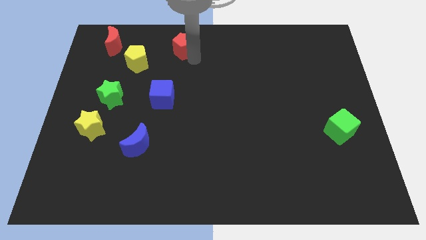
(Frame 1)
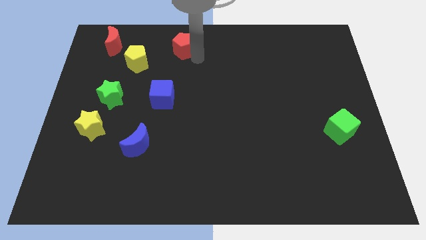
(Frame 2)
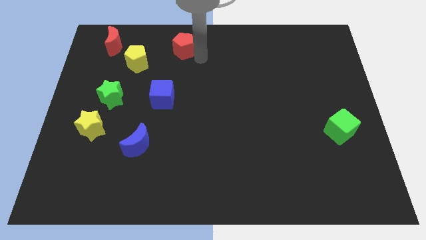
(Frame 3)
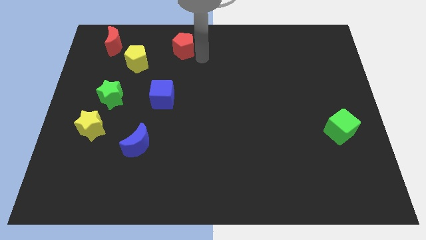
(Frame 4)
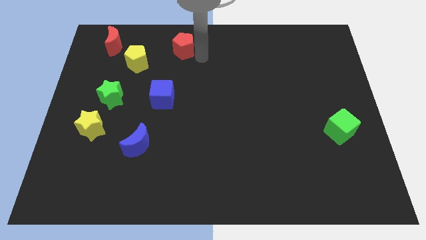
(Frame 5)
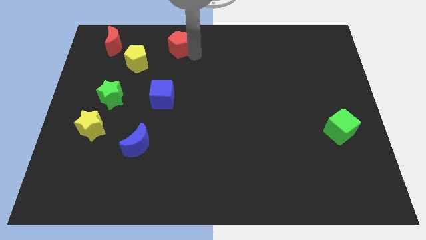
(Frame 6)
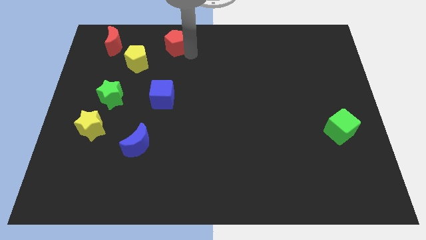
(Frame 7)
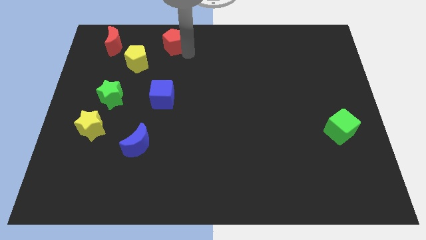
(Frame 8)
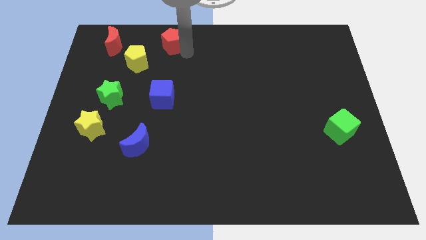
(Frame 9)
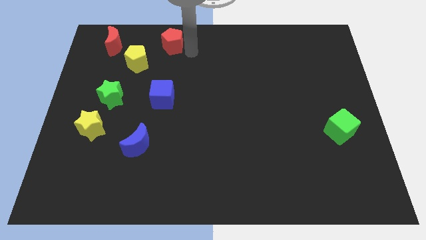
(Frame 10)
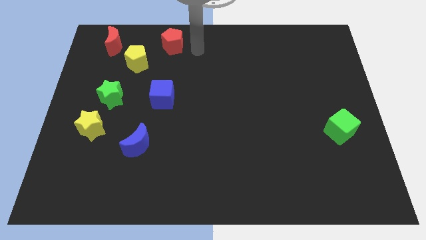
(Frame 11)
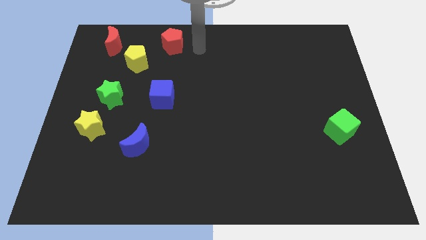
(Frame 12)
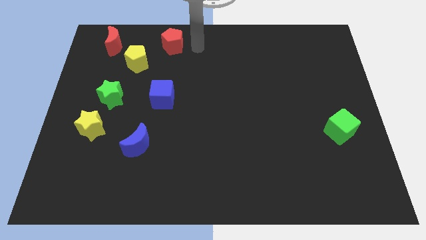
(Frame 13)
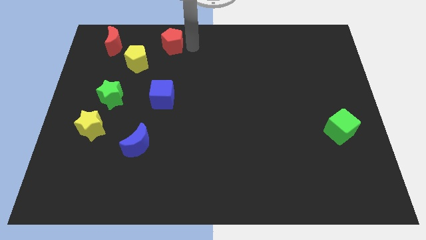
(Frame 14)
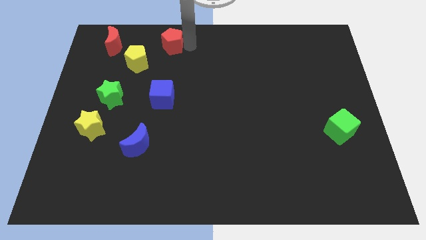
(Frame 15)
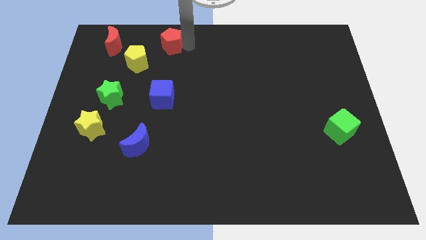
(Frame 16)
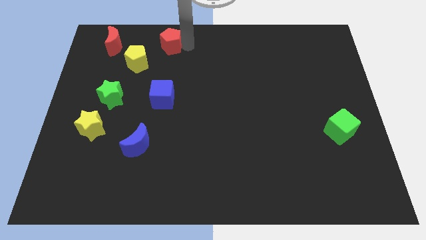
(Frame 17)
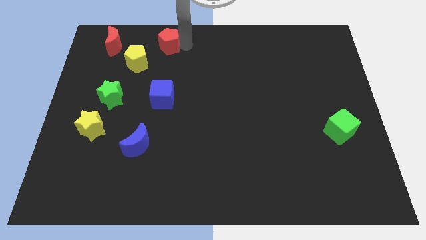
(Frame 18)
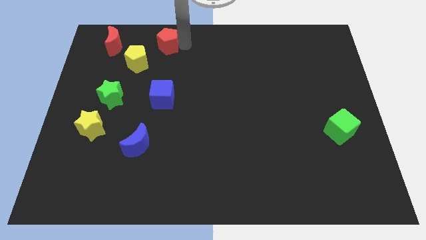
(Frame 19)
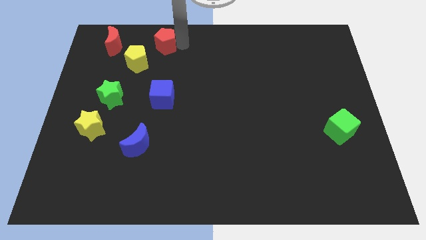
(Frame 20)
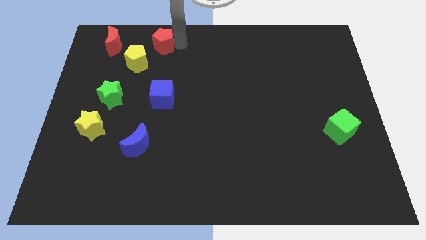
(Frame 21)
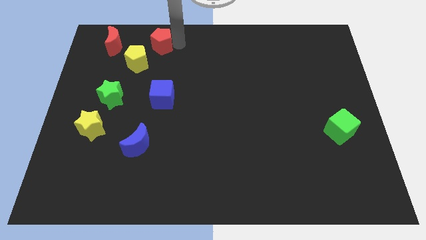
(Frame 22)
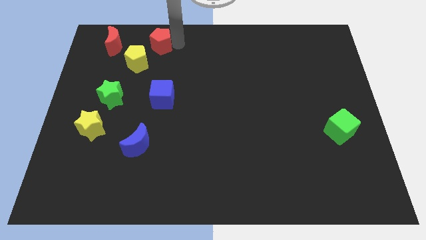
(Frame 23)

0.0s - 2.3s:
put the red pentagon vertically at the top side of the blue cube

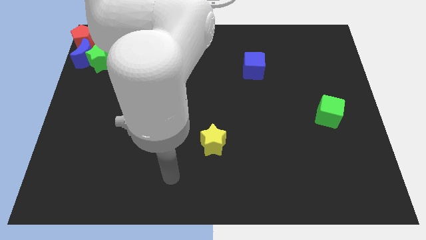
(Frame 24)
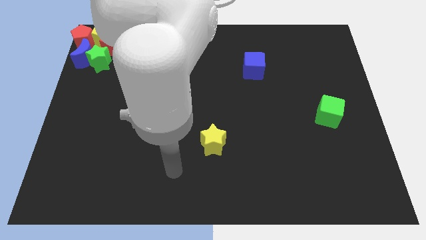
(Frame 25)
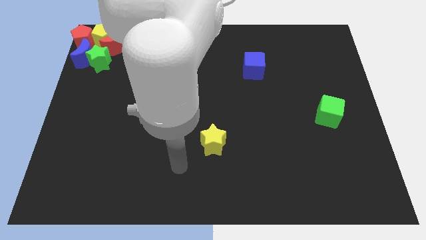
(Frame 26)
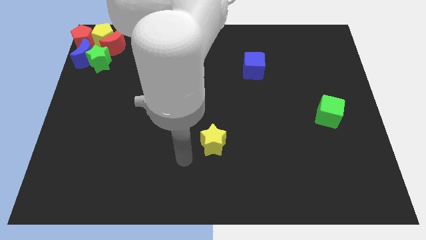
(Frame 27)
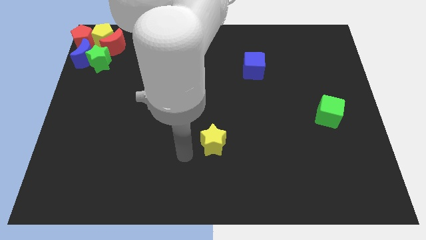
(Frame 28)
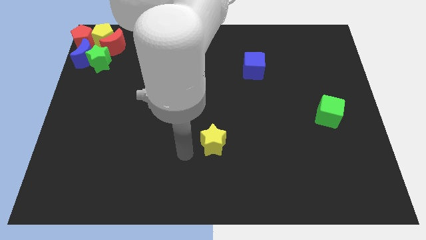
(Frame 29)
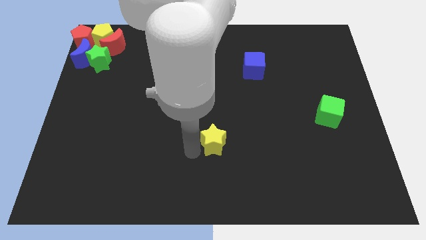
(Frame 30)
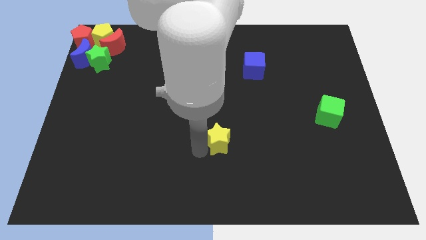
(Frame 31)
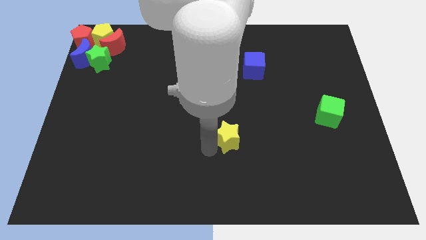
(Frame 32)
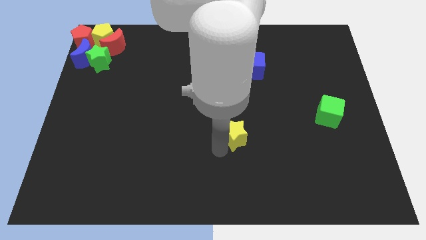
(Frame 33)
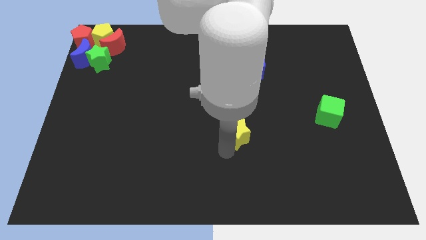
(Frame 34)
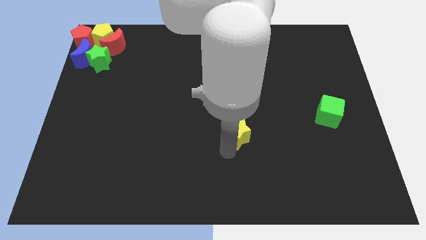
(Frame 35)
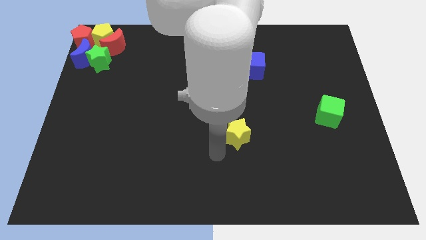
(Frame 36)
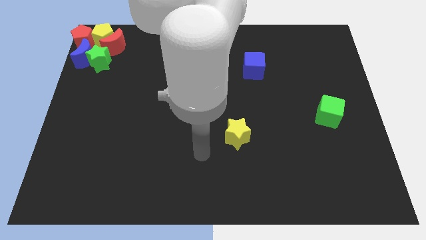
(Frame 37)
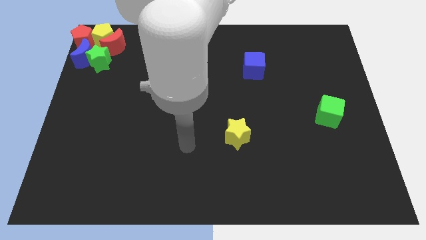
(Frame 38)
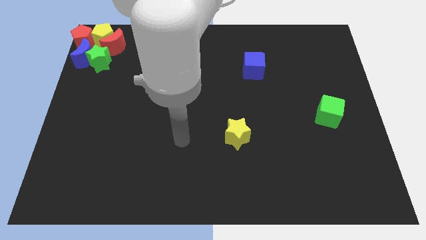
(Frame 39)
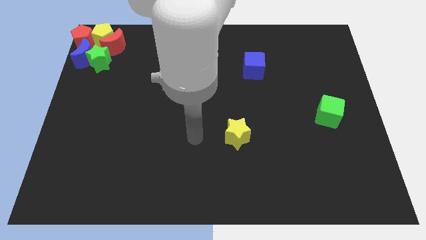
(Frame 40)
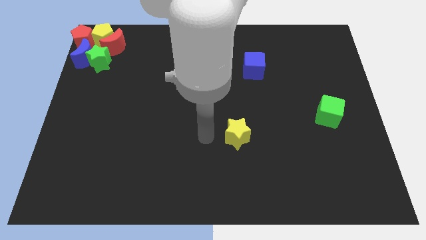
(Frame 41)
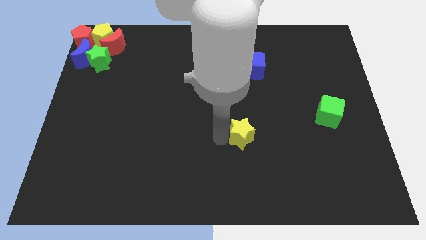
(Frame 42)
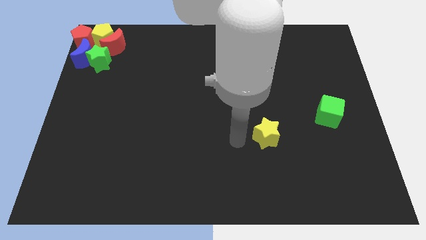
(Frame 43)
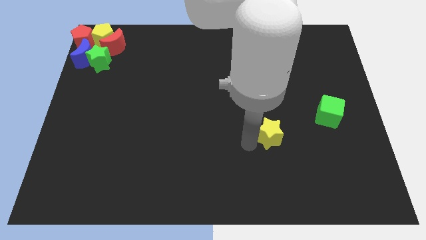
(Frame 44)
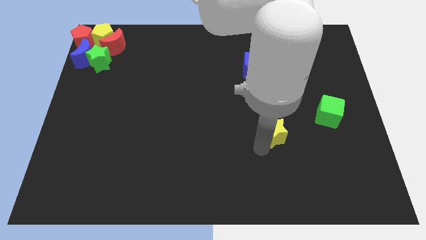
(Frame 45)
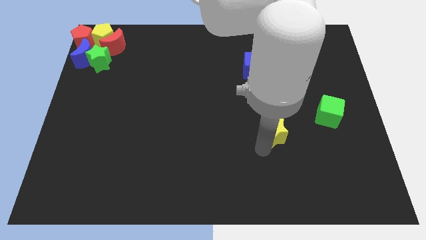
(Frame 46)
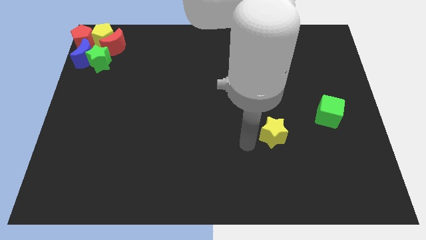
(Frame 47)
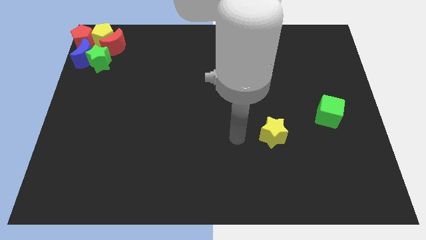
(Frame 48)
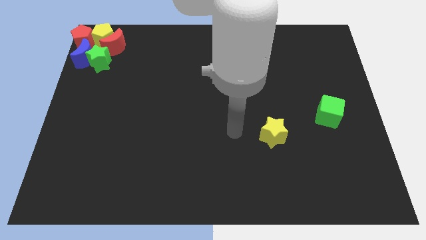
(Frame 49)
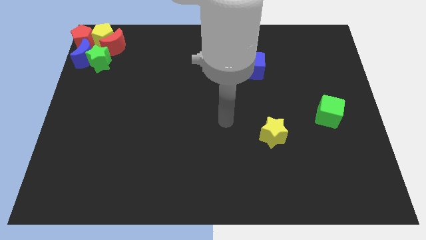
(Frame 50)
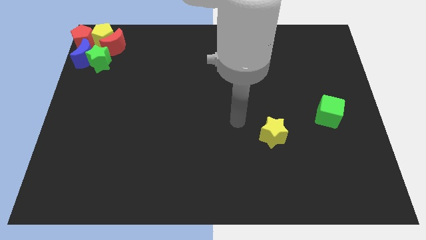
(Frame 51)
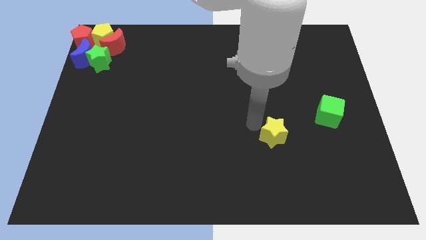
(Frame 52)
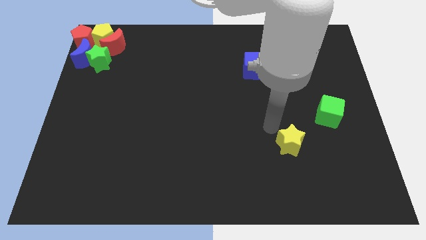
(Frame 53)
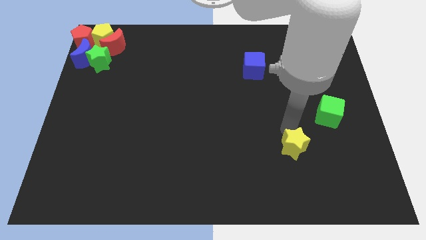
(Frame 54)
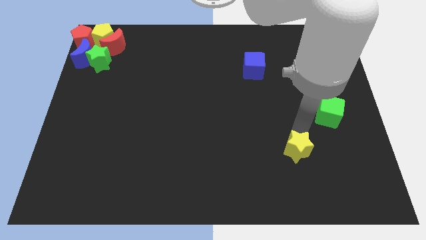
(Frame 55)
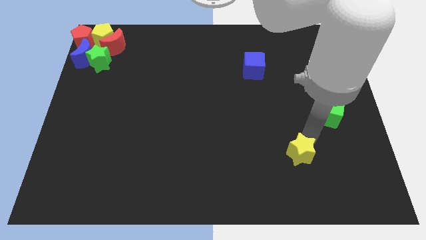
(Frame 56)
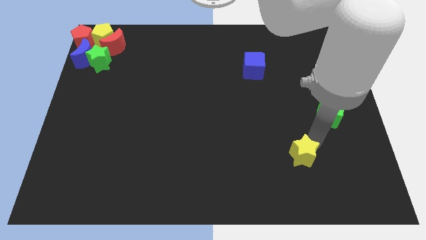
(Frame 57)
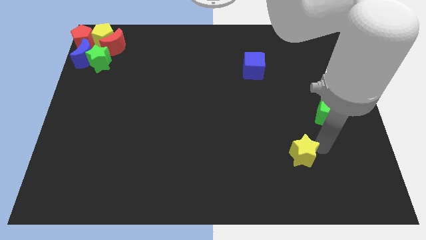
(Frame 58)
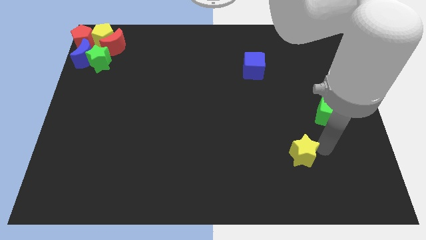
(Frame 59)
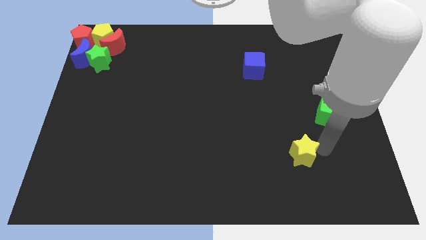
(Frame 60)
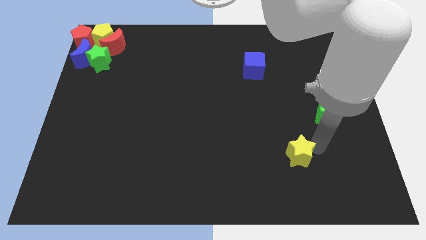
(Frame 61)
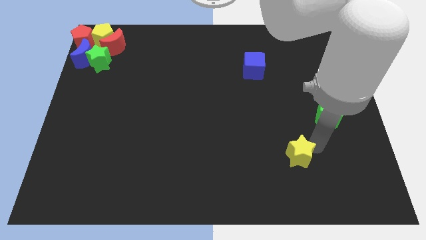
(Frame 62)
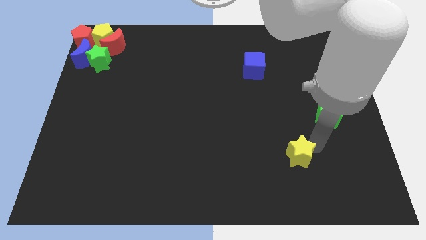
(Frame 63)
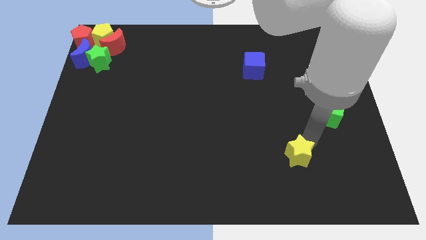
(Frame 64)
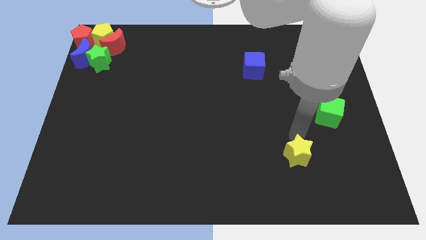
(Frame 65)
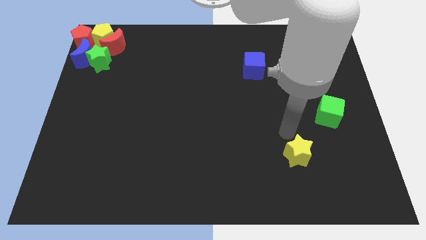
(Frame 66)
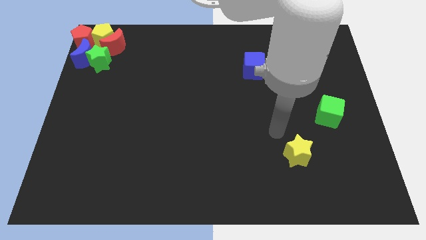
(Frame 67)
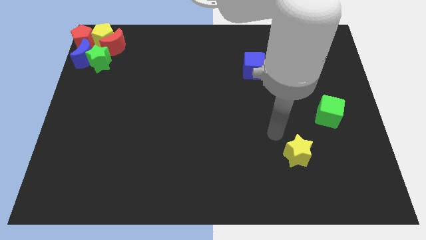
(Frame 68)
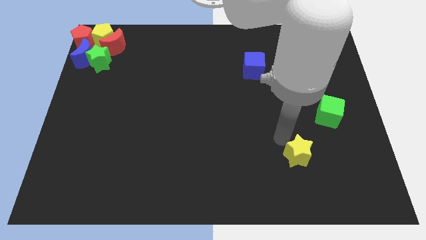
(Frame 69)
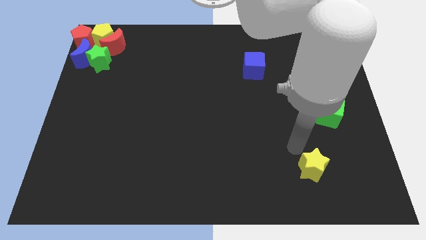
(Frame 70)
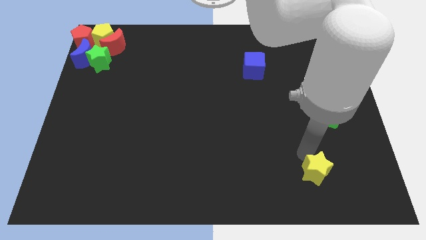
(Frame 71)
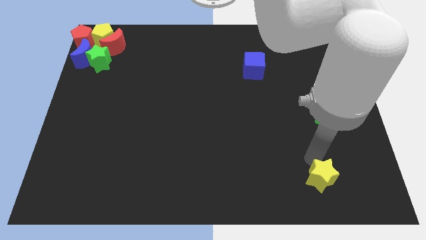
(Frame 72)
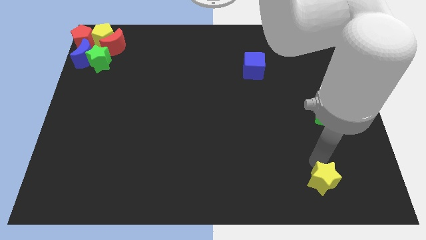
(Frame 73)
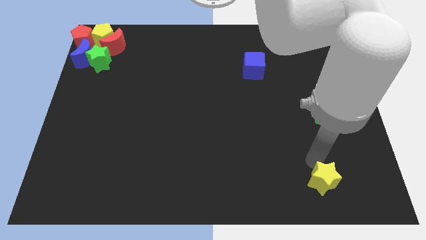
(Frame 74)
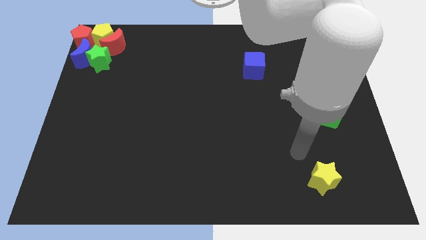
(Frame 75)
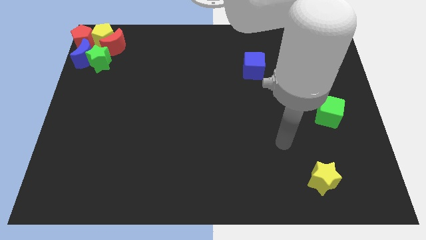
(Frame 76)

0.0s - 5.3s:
push the yellow star to the bottom right side of the board

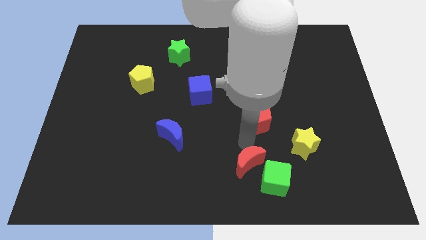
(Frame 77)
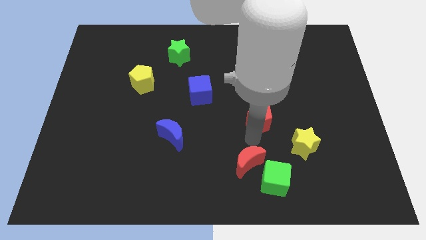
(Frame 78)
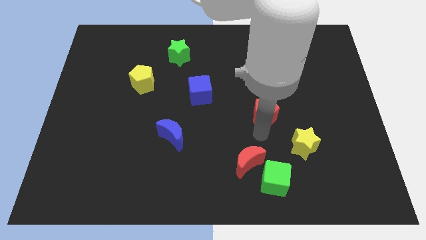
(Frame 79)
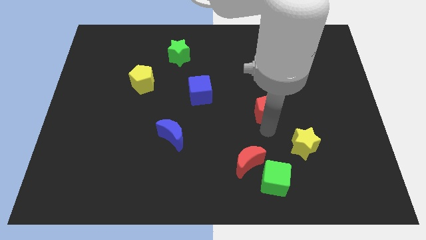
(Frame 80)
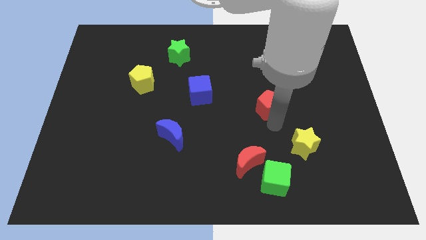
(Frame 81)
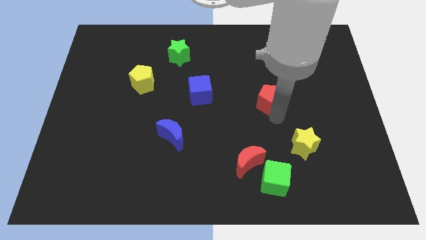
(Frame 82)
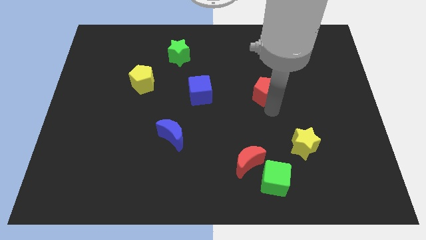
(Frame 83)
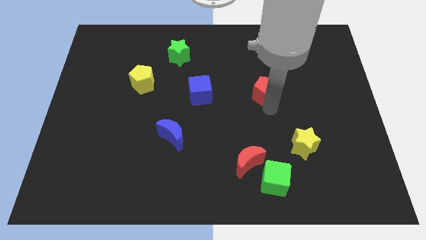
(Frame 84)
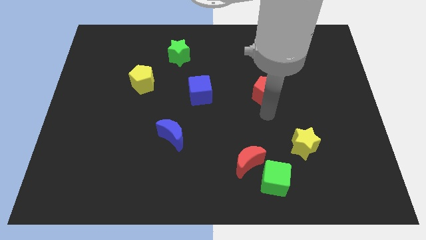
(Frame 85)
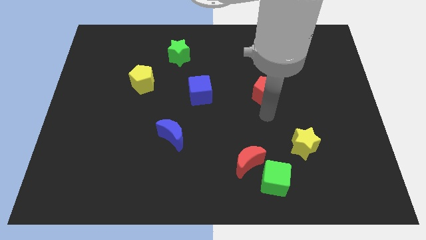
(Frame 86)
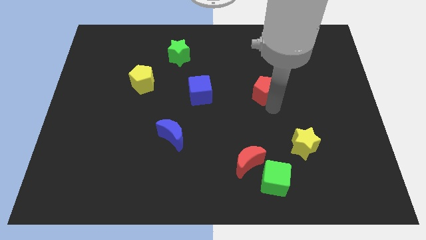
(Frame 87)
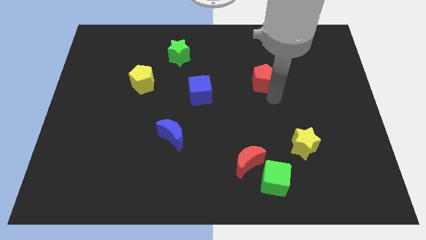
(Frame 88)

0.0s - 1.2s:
move the red pentagon to the right of the blue cube

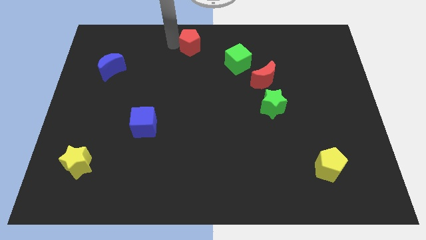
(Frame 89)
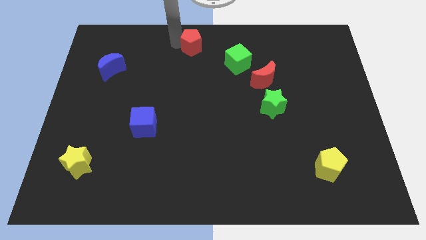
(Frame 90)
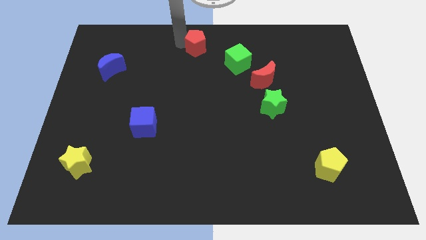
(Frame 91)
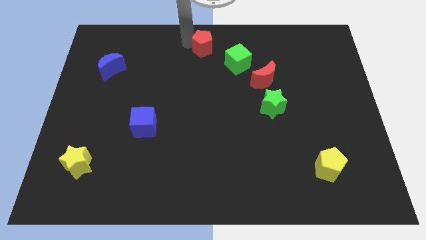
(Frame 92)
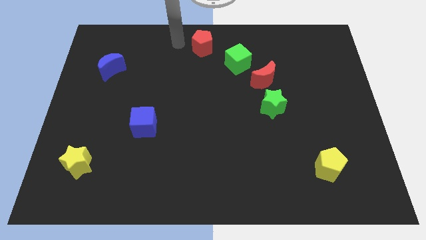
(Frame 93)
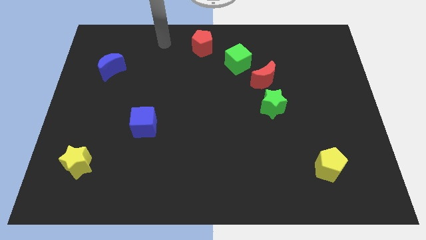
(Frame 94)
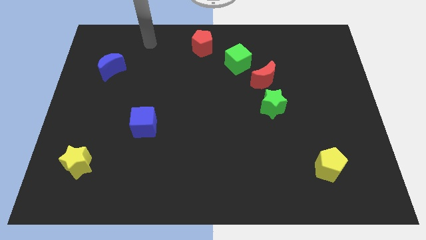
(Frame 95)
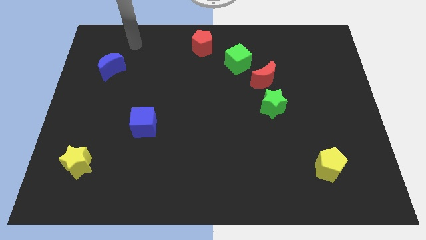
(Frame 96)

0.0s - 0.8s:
place the red pentagon diagonally top left to the green cube
